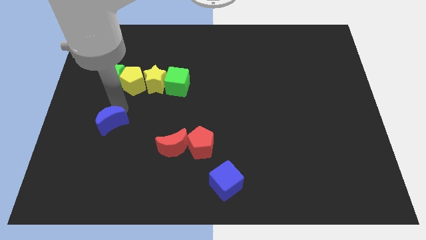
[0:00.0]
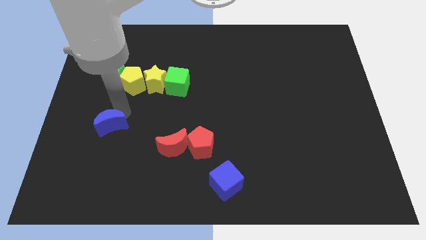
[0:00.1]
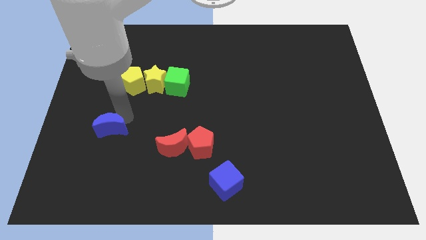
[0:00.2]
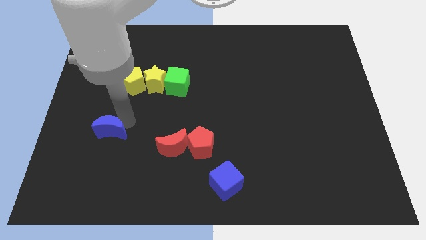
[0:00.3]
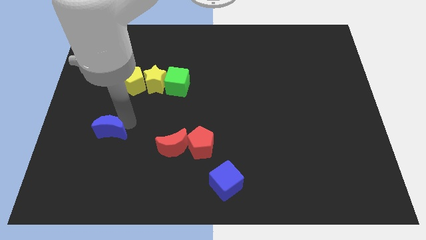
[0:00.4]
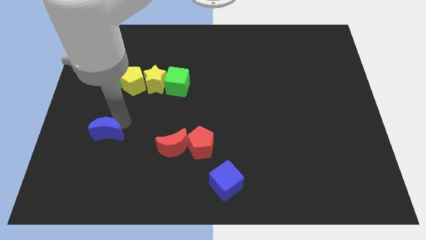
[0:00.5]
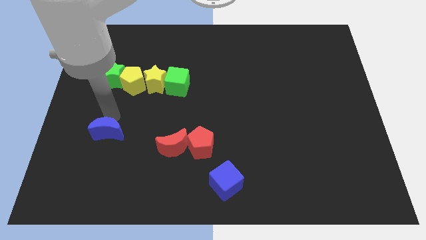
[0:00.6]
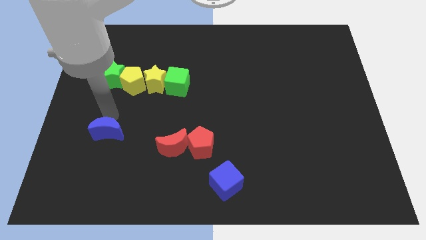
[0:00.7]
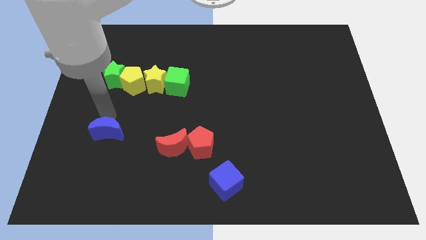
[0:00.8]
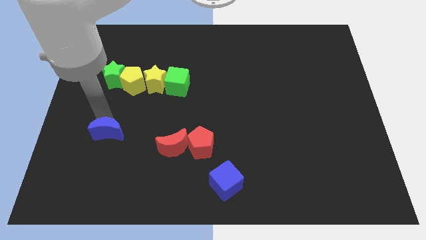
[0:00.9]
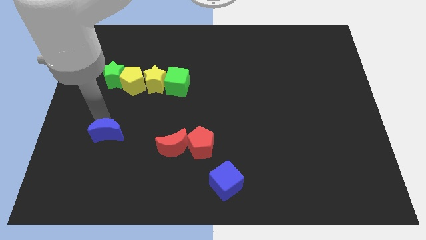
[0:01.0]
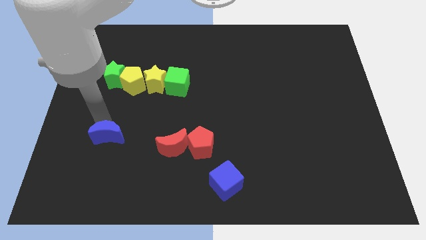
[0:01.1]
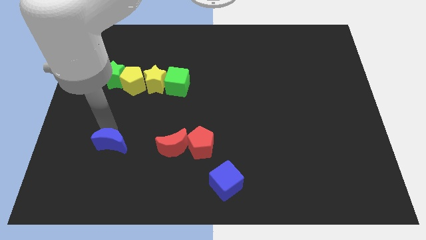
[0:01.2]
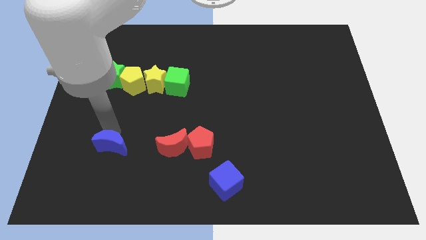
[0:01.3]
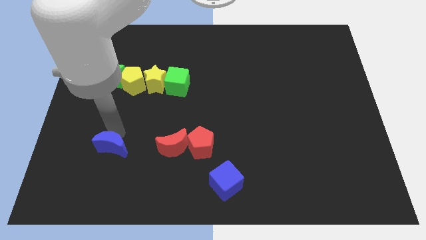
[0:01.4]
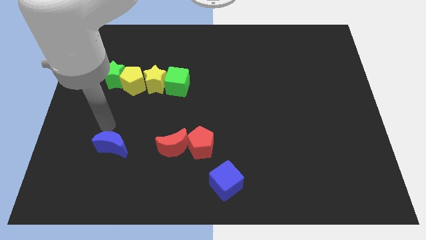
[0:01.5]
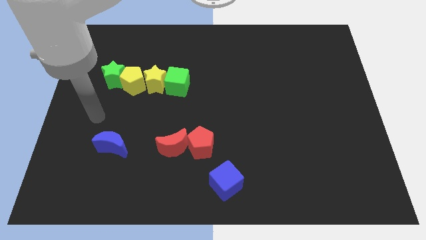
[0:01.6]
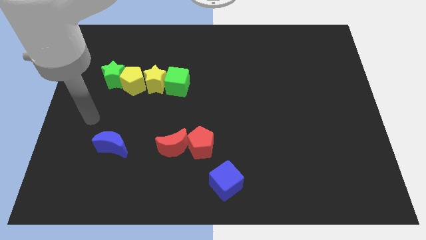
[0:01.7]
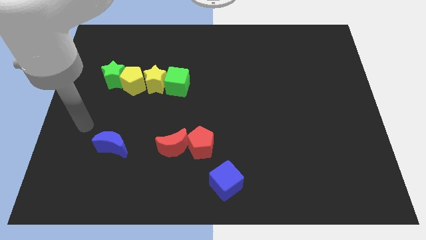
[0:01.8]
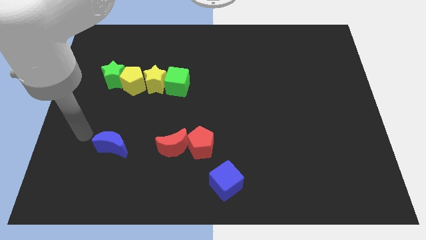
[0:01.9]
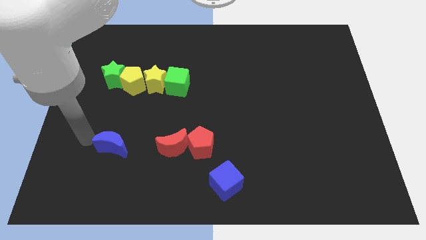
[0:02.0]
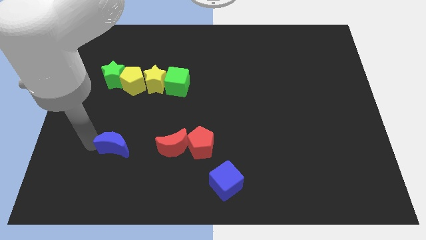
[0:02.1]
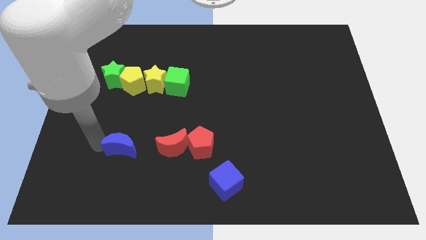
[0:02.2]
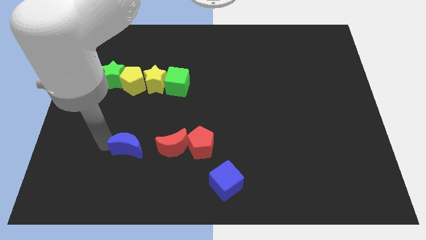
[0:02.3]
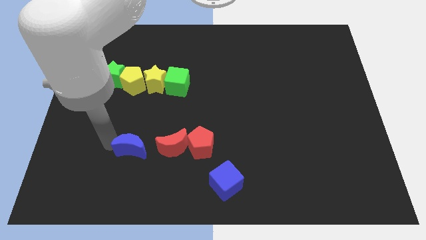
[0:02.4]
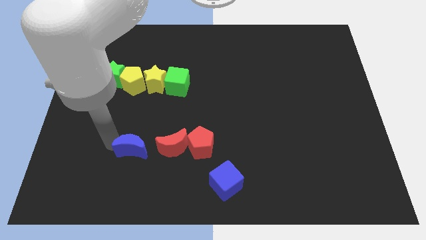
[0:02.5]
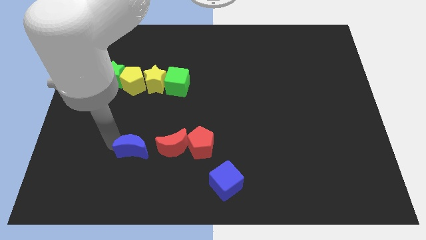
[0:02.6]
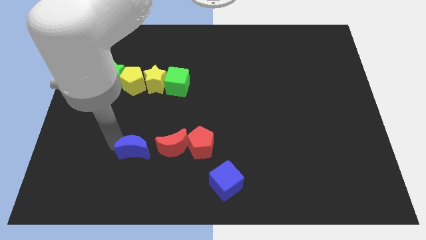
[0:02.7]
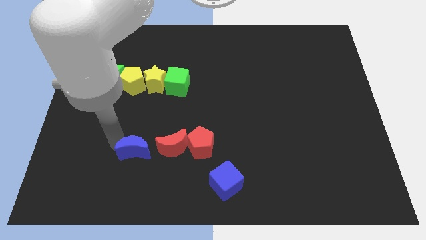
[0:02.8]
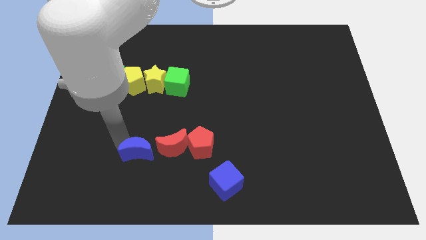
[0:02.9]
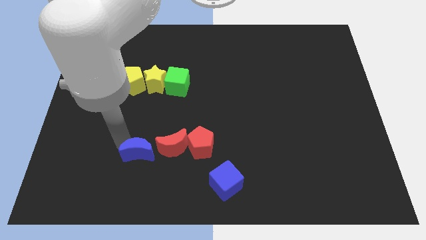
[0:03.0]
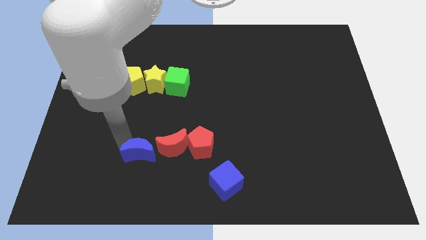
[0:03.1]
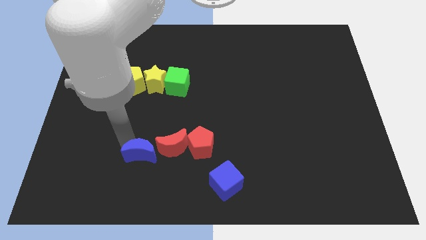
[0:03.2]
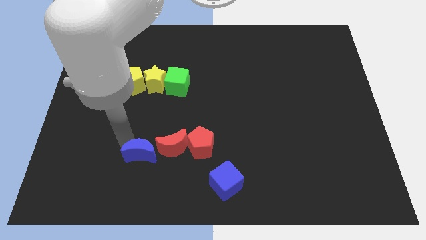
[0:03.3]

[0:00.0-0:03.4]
slide the blue crescent to the left side of the red crescent

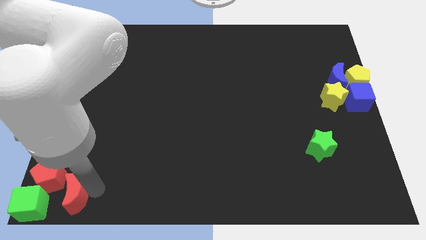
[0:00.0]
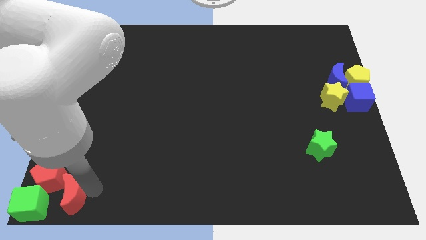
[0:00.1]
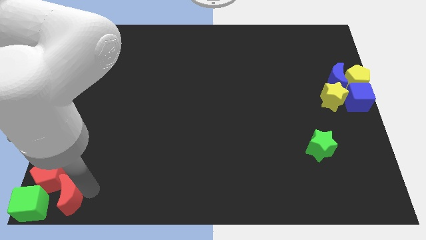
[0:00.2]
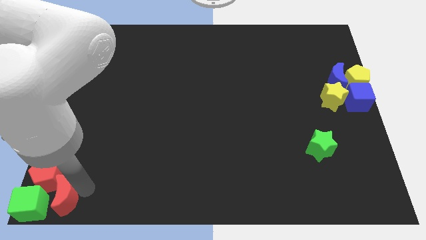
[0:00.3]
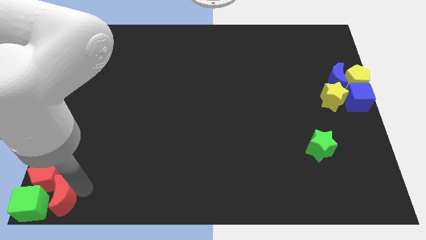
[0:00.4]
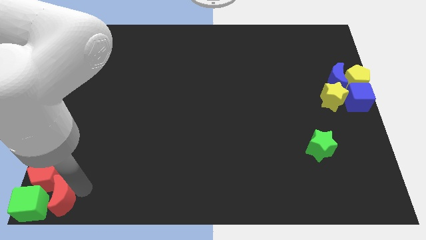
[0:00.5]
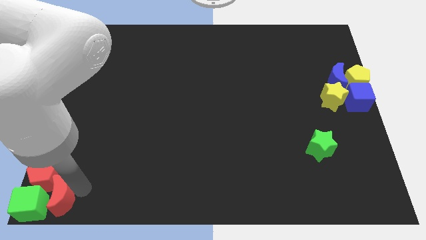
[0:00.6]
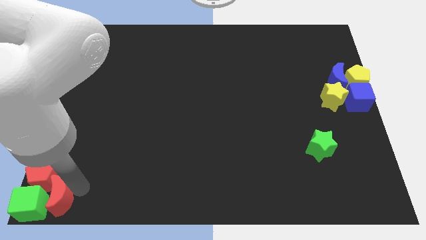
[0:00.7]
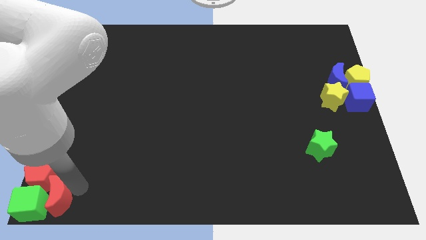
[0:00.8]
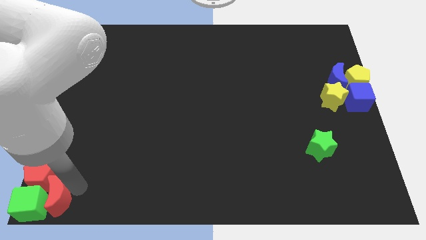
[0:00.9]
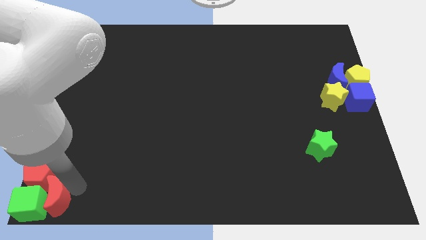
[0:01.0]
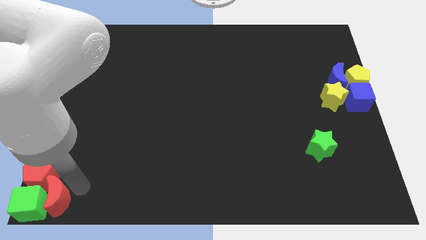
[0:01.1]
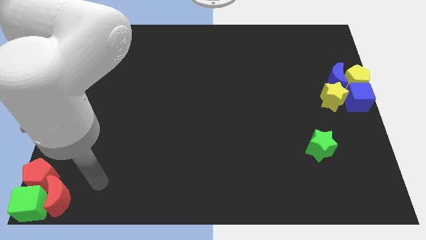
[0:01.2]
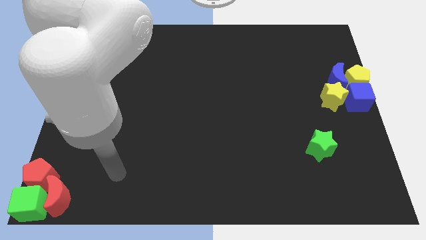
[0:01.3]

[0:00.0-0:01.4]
push red crescent towards green cube

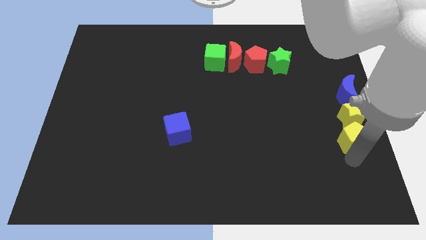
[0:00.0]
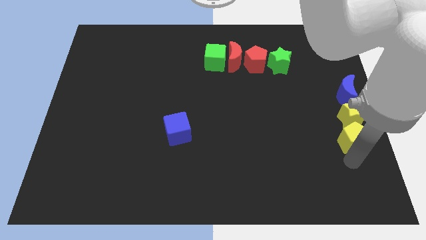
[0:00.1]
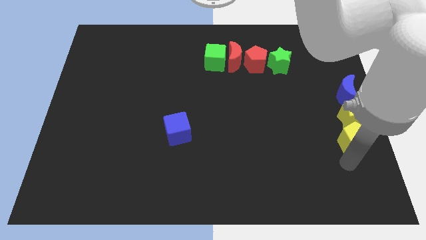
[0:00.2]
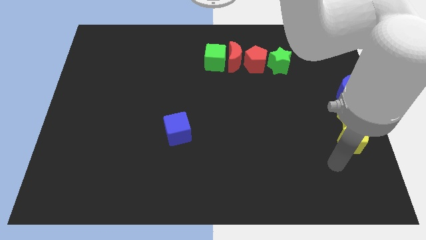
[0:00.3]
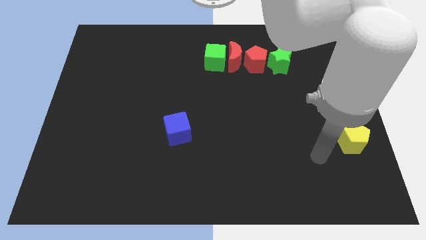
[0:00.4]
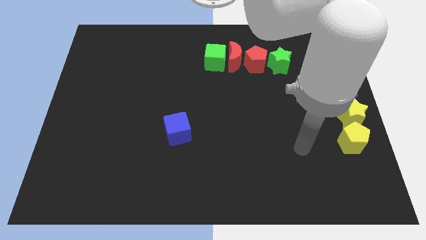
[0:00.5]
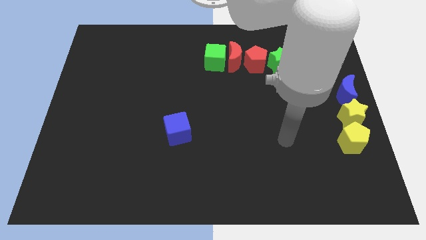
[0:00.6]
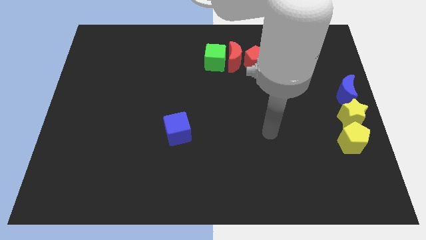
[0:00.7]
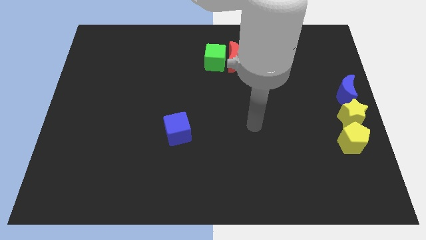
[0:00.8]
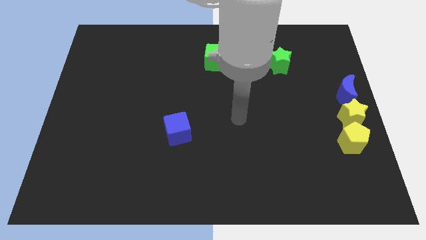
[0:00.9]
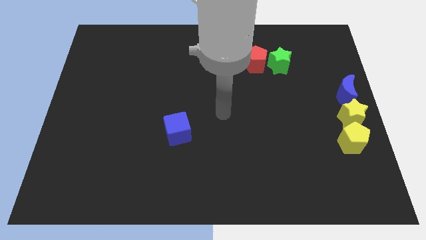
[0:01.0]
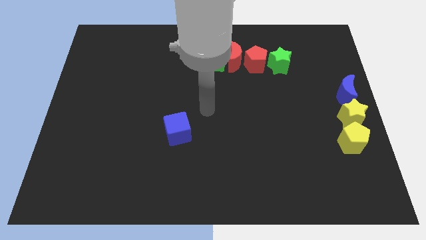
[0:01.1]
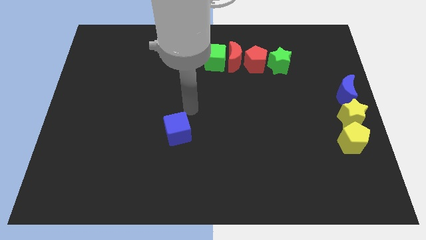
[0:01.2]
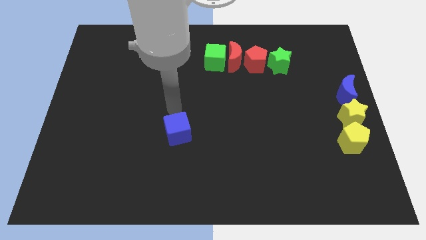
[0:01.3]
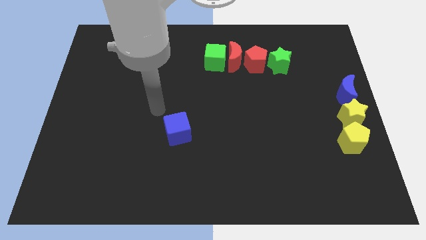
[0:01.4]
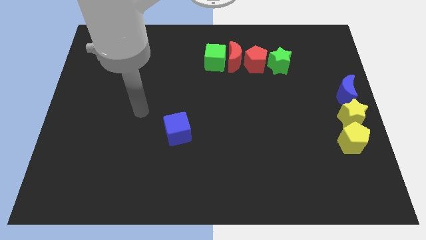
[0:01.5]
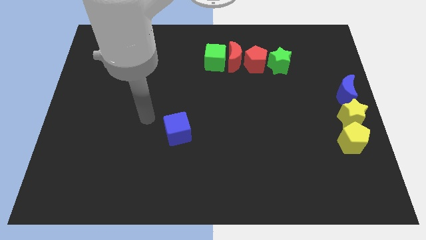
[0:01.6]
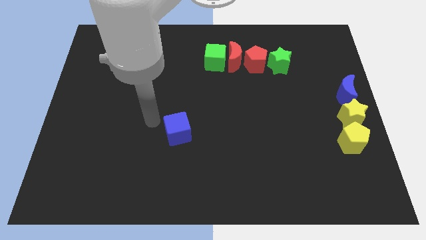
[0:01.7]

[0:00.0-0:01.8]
move the arm away from the yellow pentagon

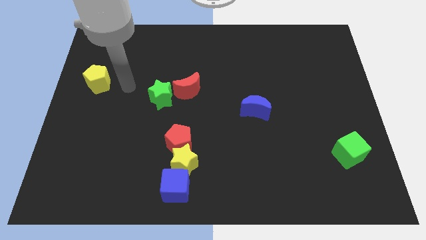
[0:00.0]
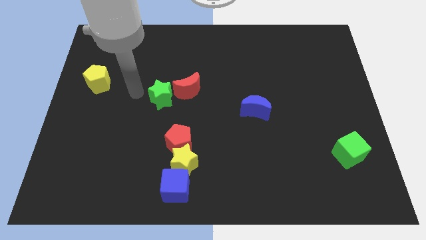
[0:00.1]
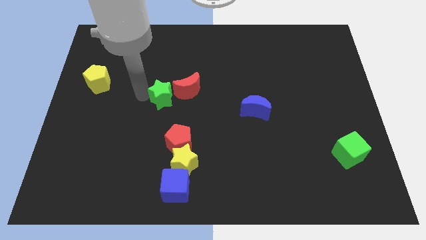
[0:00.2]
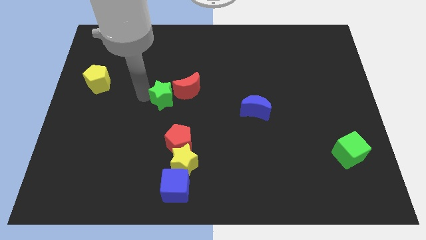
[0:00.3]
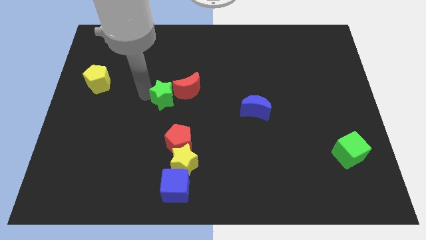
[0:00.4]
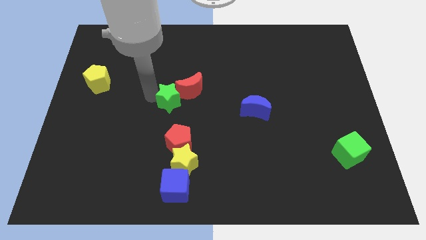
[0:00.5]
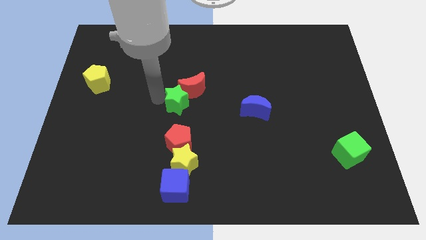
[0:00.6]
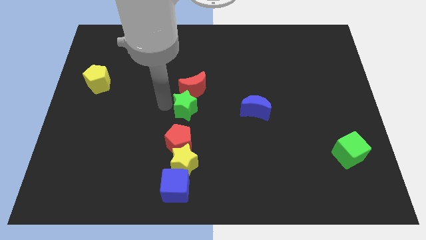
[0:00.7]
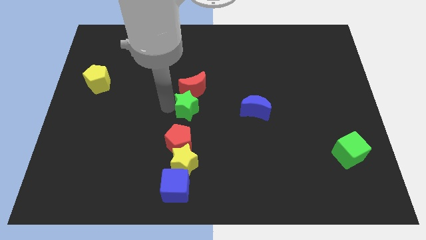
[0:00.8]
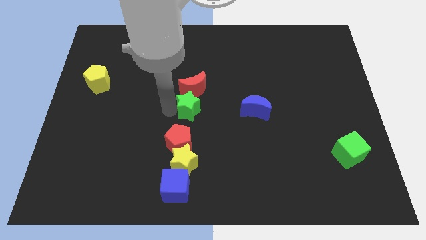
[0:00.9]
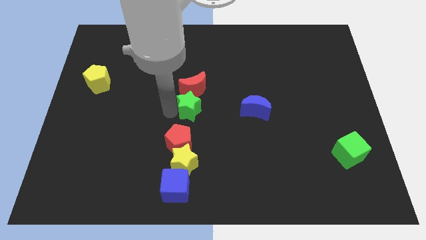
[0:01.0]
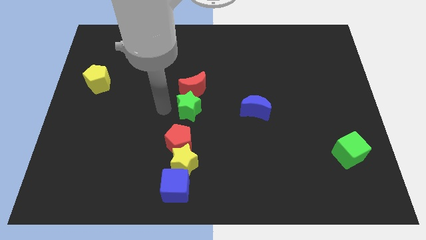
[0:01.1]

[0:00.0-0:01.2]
place the green star below the red crescent to form a vertical line

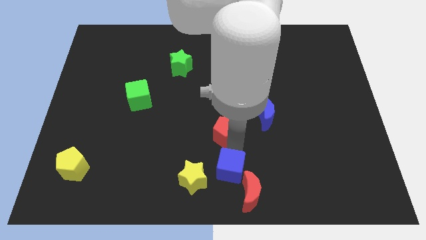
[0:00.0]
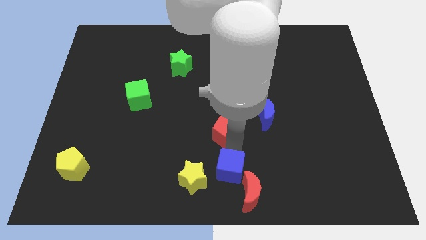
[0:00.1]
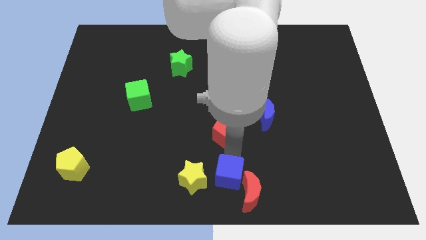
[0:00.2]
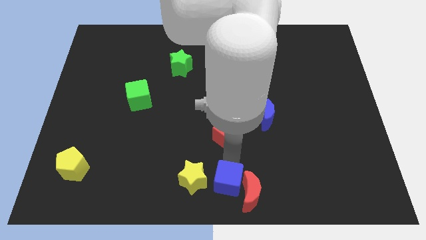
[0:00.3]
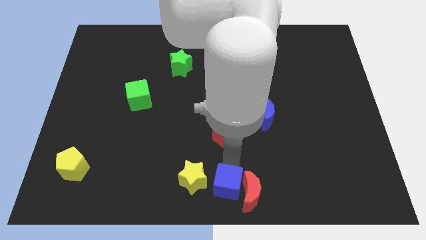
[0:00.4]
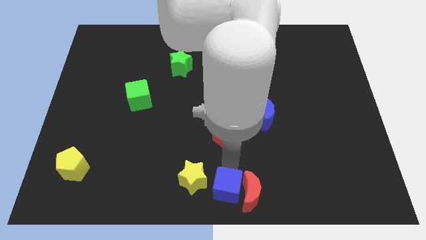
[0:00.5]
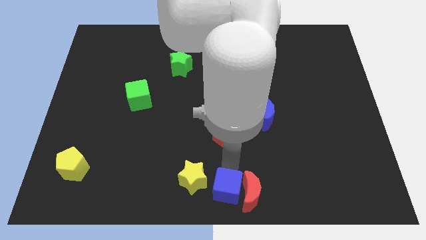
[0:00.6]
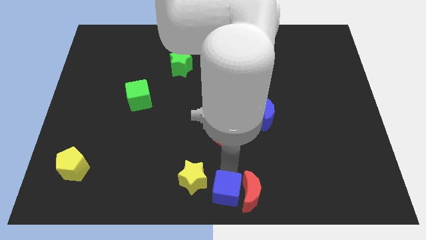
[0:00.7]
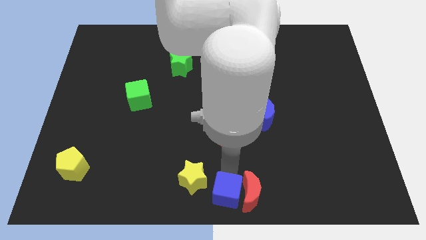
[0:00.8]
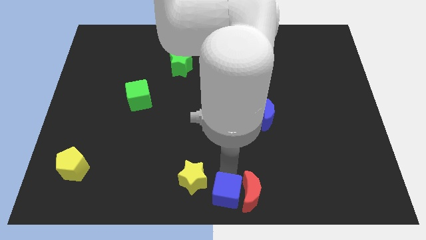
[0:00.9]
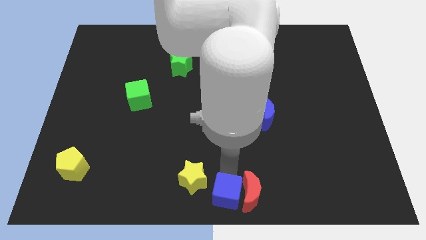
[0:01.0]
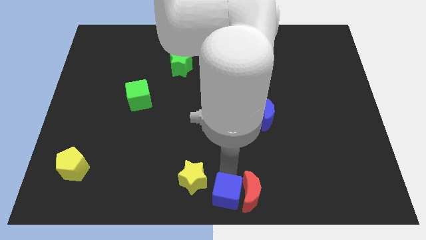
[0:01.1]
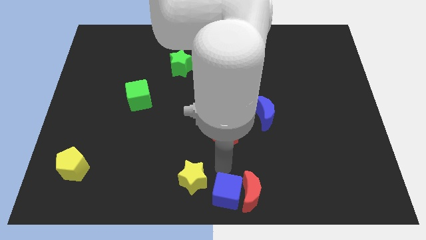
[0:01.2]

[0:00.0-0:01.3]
move blue cube slightly downwards

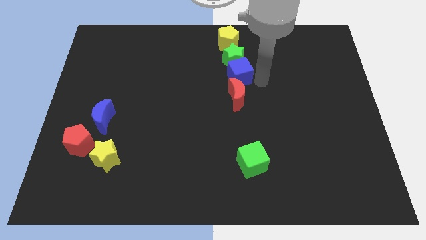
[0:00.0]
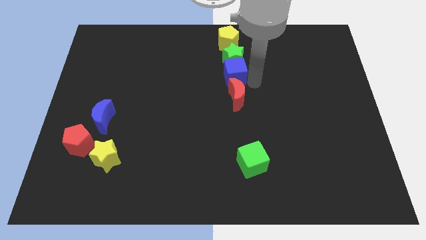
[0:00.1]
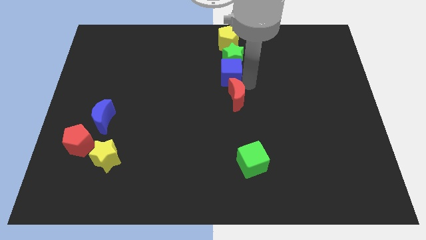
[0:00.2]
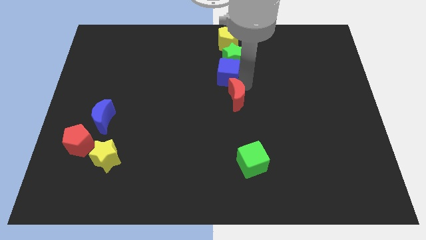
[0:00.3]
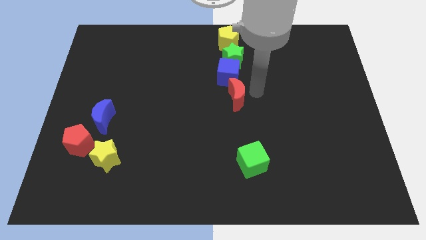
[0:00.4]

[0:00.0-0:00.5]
push the blue cube slightly to the left of the board
